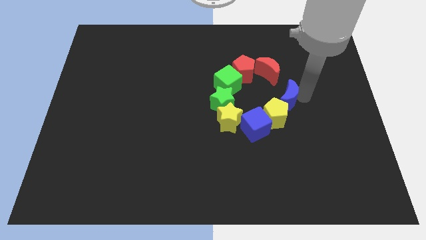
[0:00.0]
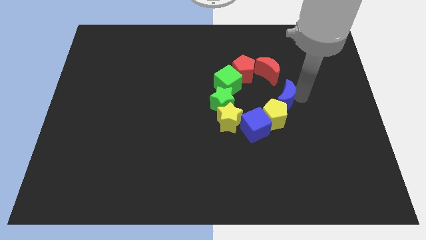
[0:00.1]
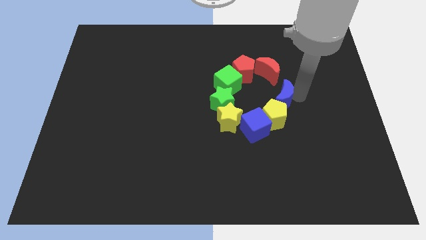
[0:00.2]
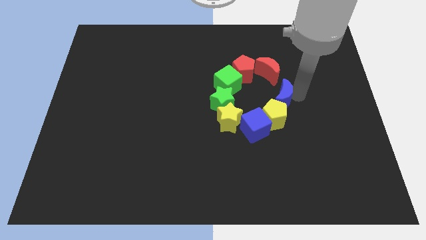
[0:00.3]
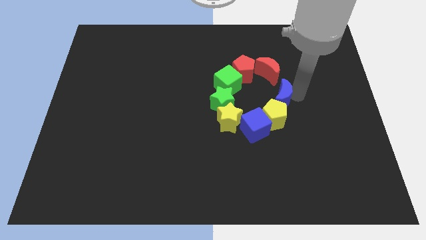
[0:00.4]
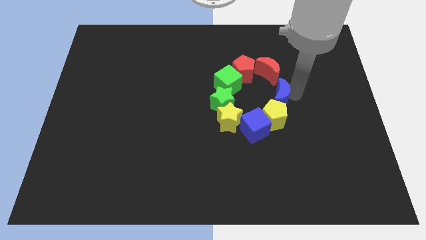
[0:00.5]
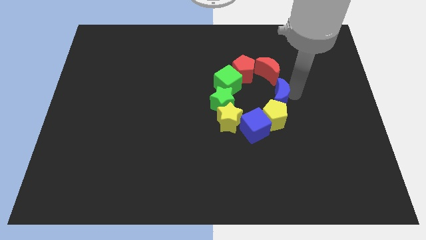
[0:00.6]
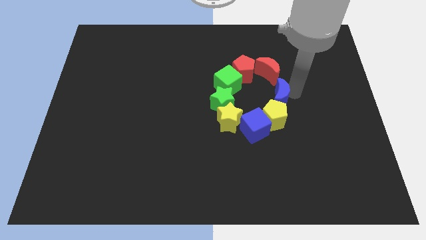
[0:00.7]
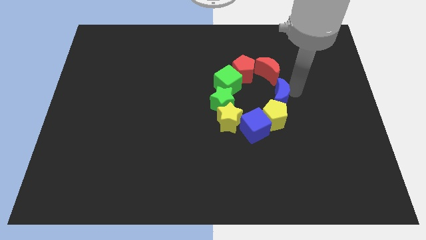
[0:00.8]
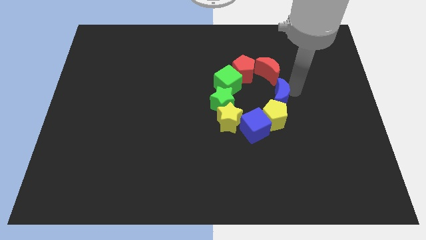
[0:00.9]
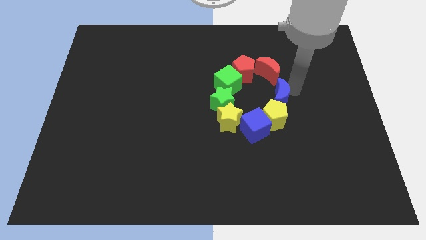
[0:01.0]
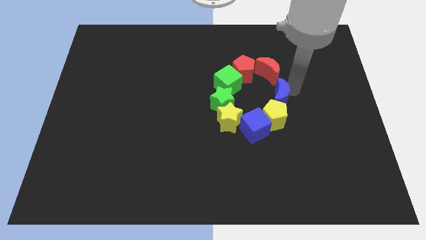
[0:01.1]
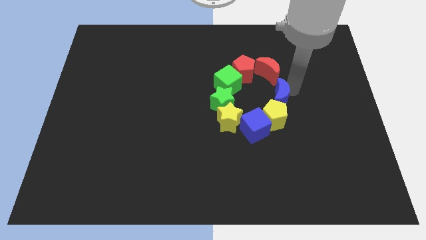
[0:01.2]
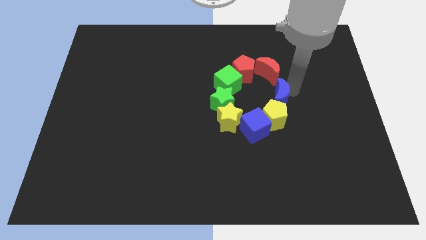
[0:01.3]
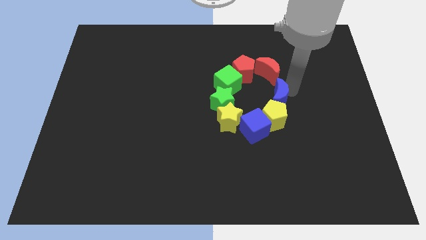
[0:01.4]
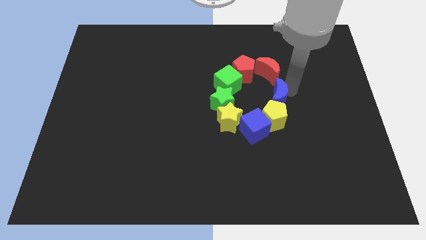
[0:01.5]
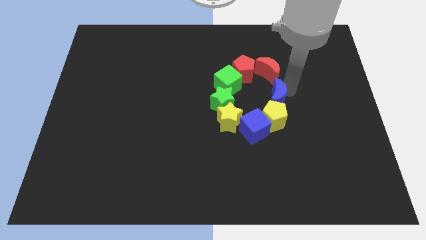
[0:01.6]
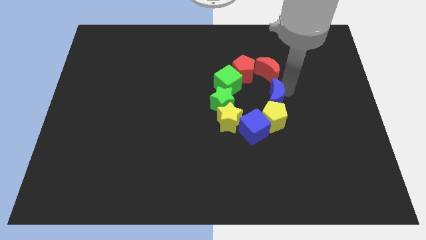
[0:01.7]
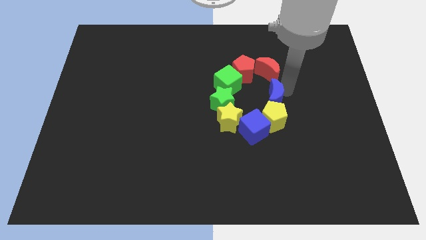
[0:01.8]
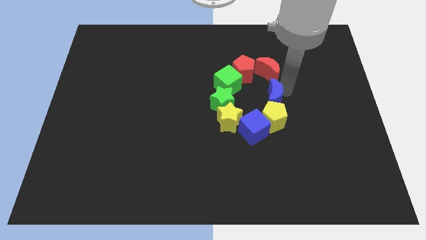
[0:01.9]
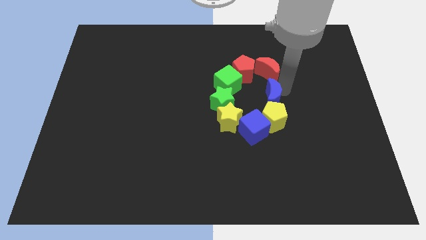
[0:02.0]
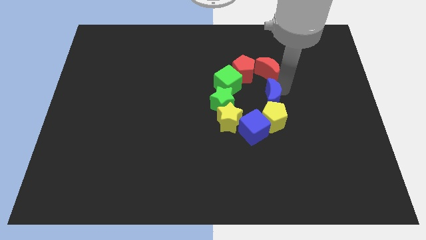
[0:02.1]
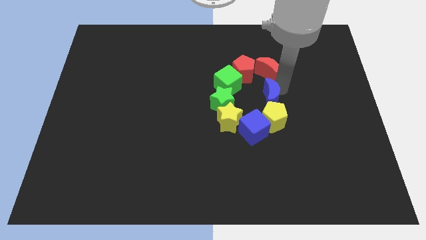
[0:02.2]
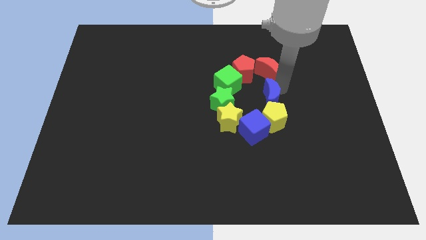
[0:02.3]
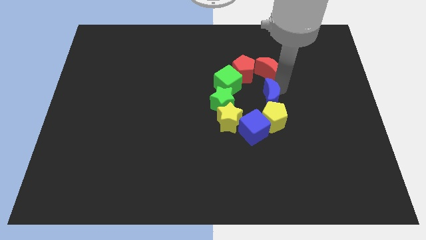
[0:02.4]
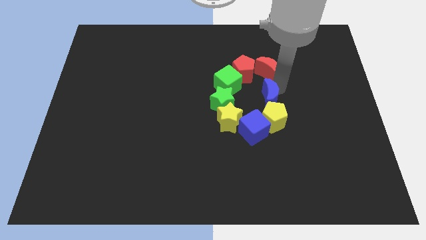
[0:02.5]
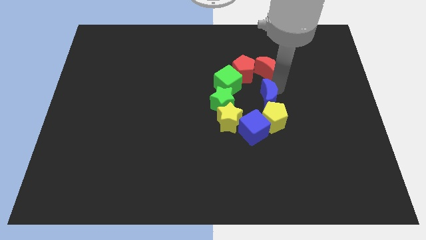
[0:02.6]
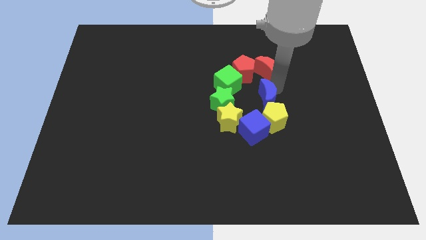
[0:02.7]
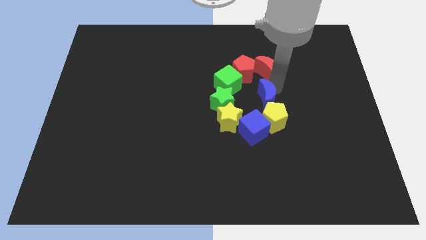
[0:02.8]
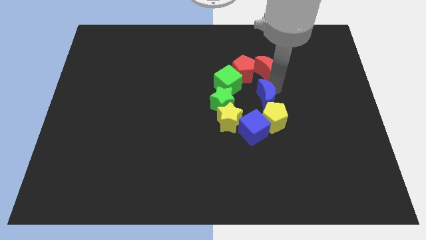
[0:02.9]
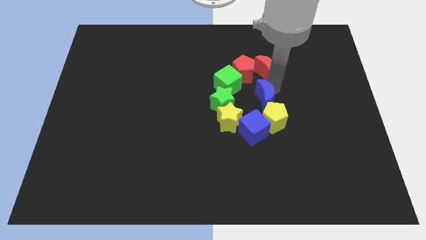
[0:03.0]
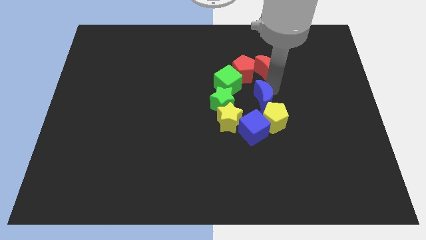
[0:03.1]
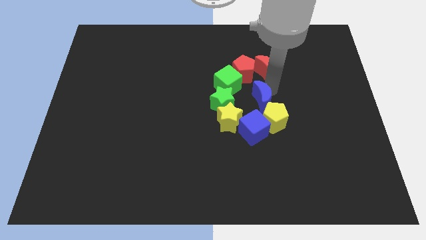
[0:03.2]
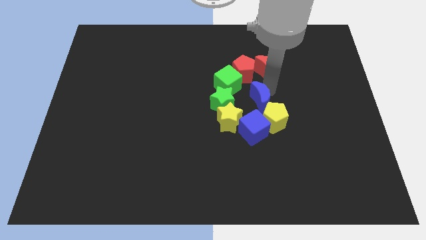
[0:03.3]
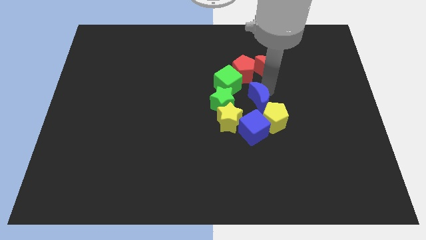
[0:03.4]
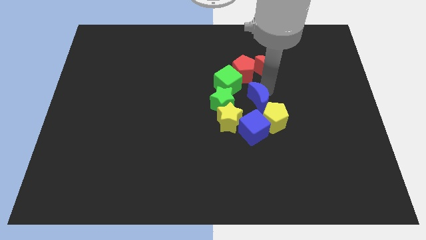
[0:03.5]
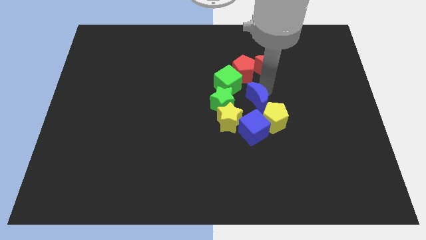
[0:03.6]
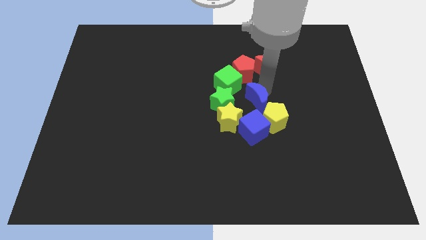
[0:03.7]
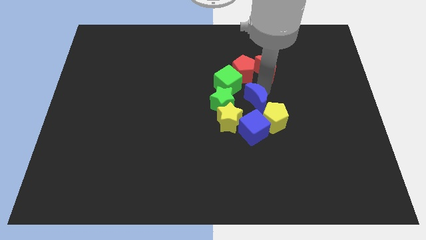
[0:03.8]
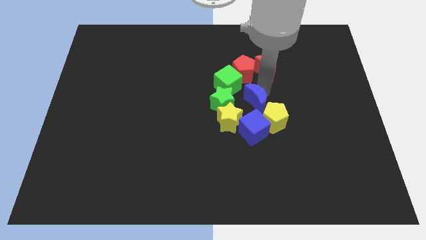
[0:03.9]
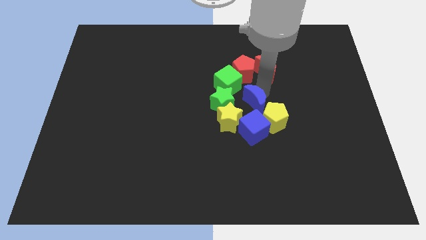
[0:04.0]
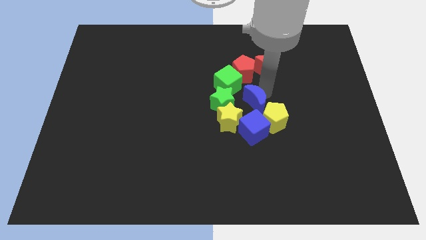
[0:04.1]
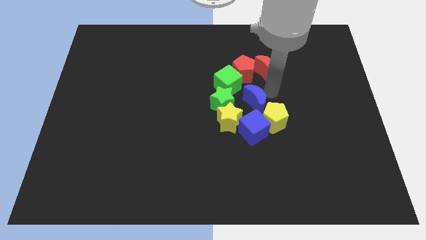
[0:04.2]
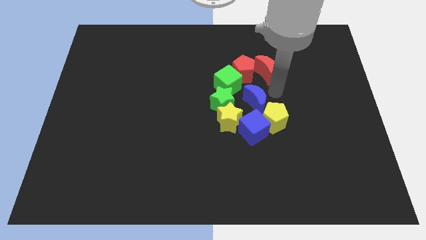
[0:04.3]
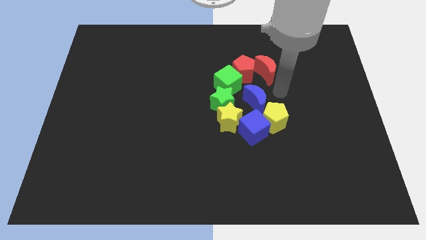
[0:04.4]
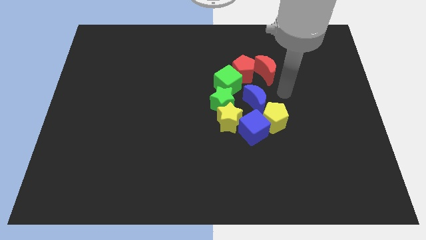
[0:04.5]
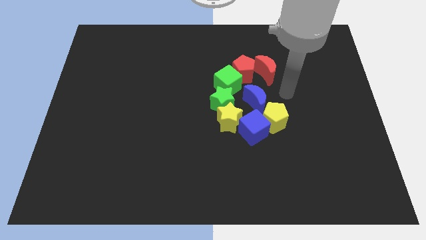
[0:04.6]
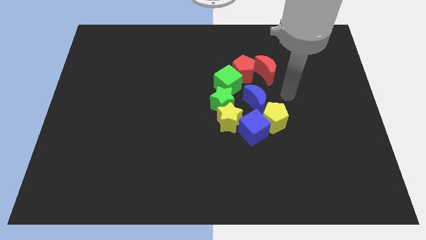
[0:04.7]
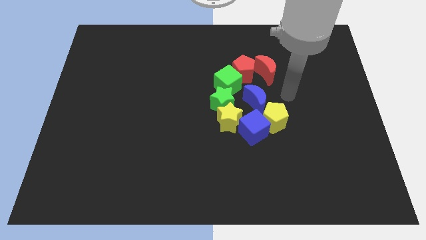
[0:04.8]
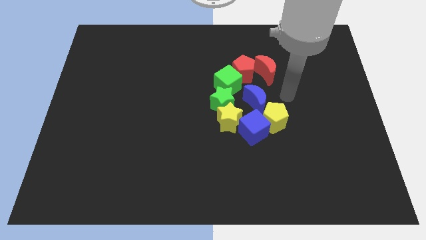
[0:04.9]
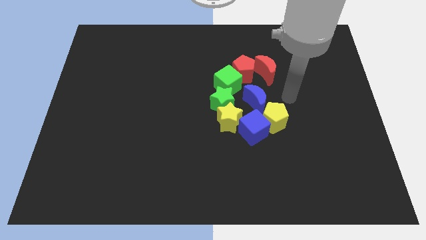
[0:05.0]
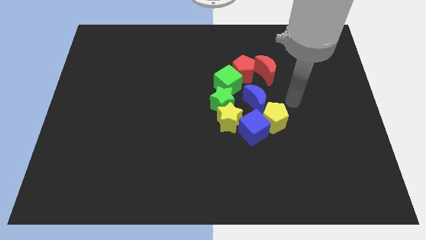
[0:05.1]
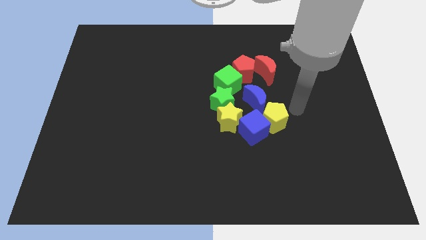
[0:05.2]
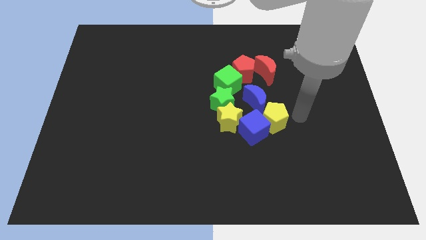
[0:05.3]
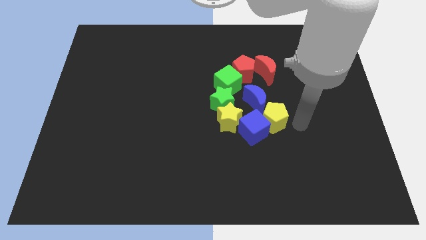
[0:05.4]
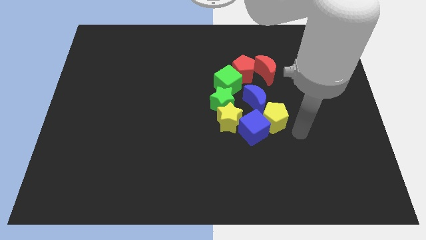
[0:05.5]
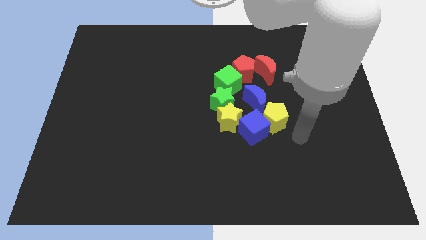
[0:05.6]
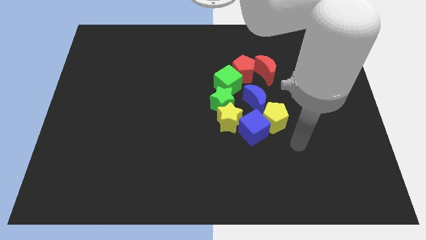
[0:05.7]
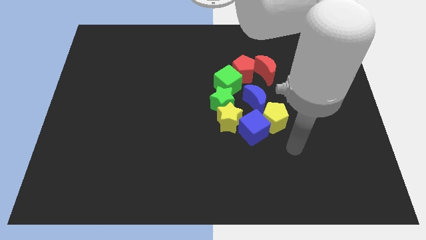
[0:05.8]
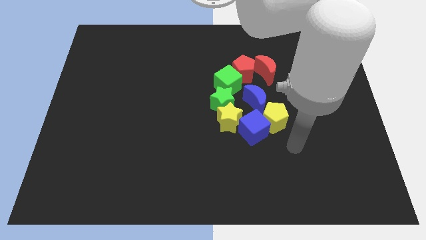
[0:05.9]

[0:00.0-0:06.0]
push the blue crescent to the top of the blue cube

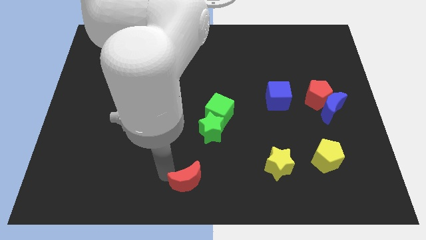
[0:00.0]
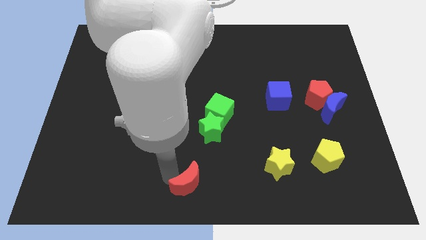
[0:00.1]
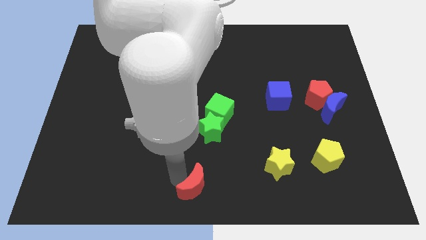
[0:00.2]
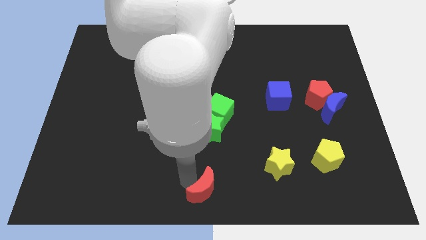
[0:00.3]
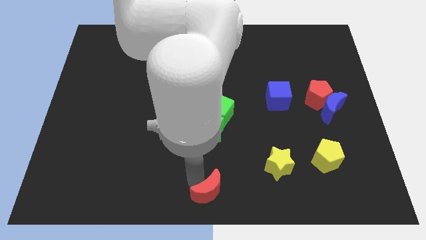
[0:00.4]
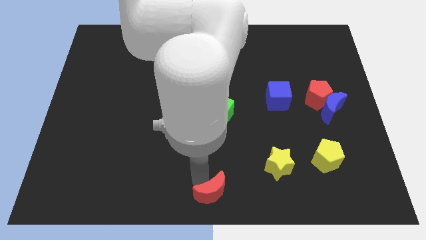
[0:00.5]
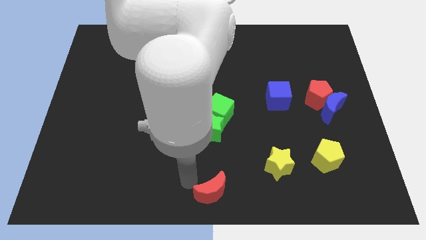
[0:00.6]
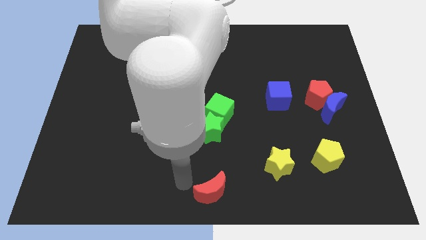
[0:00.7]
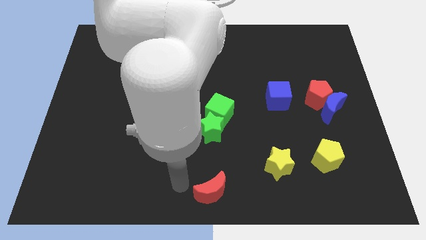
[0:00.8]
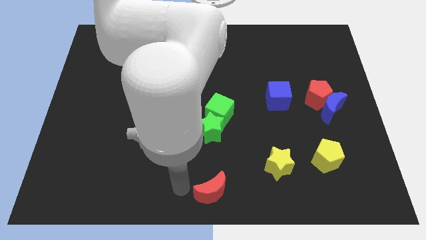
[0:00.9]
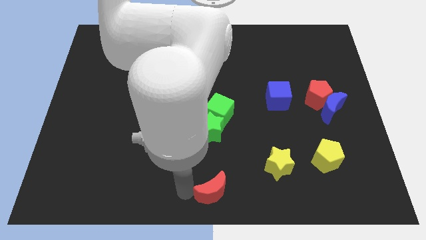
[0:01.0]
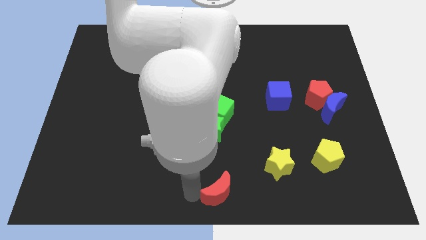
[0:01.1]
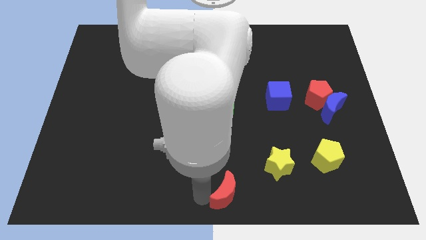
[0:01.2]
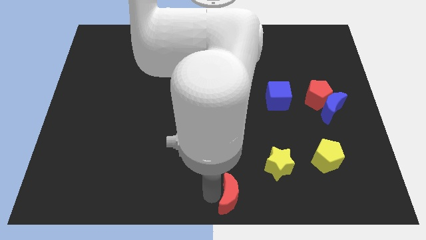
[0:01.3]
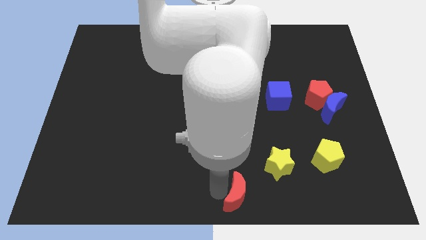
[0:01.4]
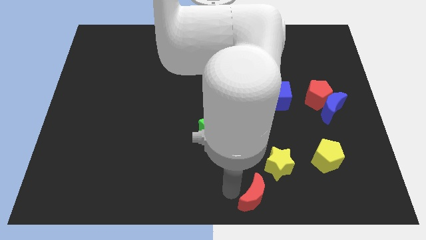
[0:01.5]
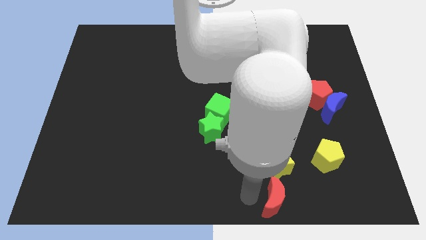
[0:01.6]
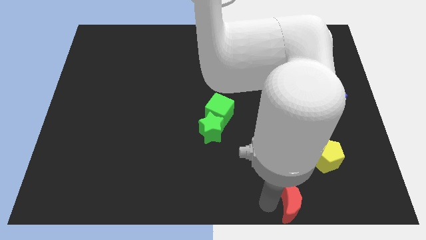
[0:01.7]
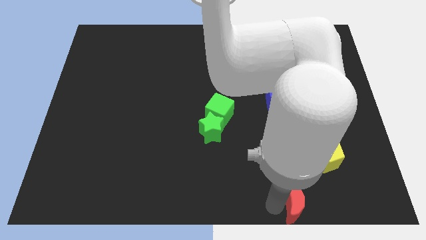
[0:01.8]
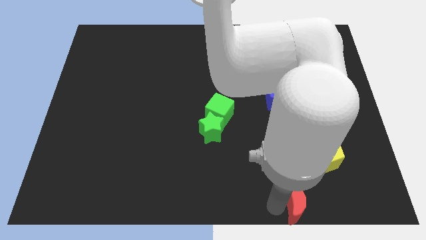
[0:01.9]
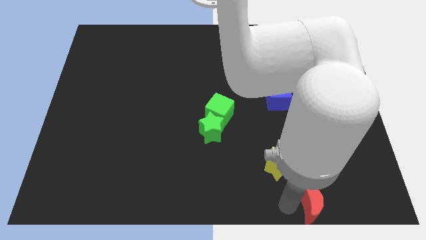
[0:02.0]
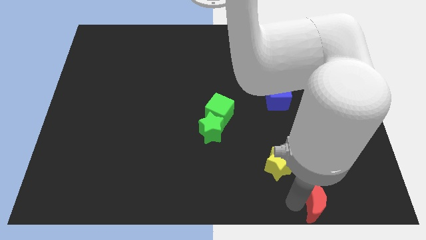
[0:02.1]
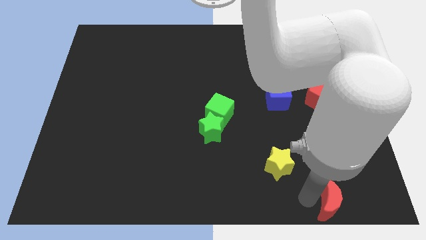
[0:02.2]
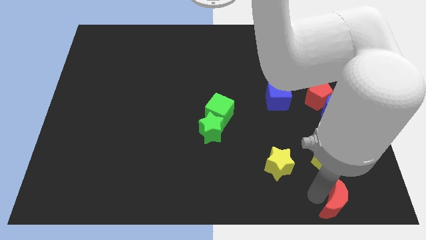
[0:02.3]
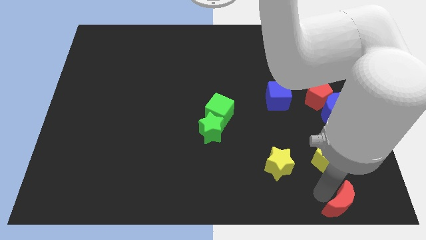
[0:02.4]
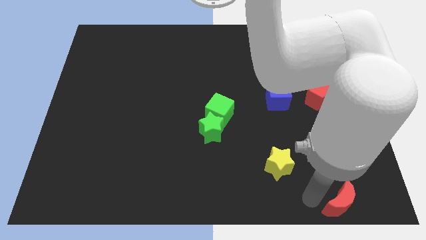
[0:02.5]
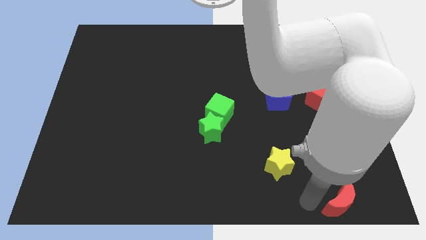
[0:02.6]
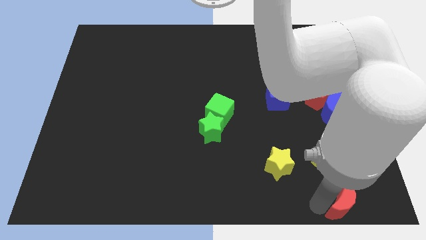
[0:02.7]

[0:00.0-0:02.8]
move red moon below yellow pentagon
